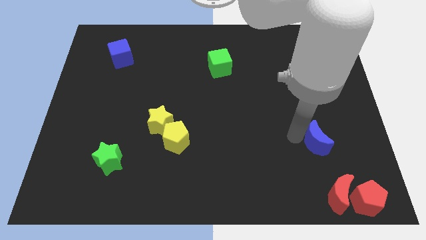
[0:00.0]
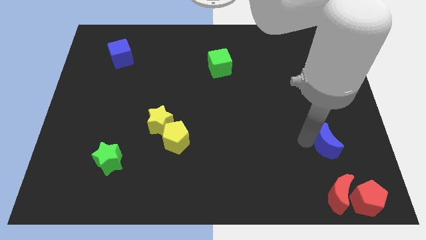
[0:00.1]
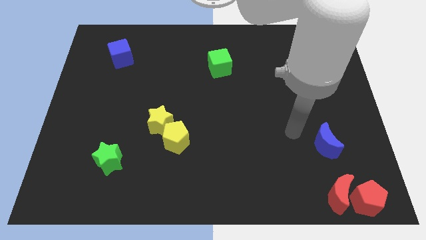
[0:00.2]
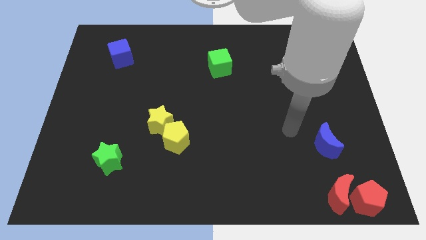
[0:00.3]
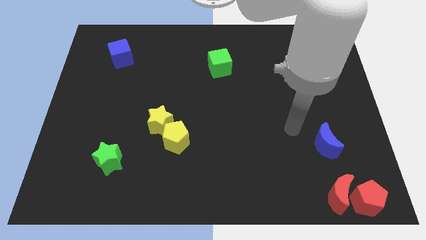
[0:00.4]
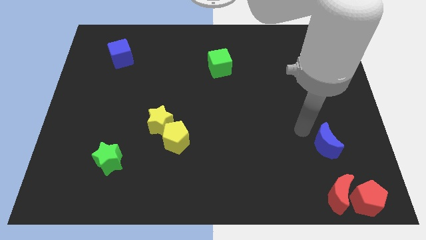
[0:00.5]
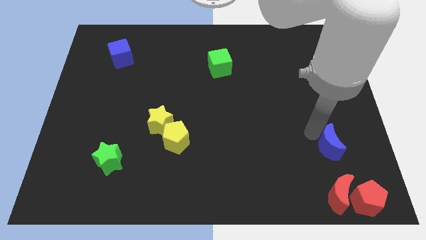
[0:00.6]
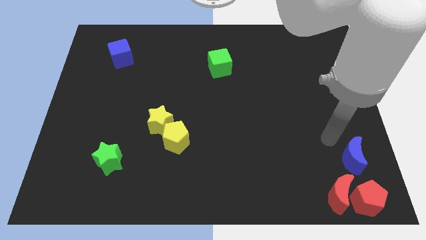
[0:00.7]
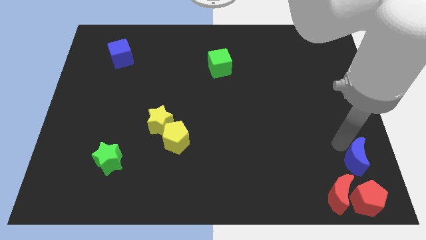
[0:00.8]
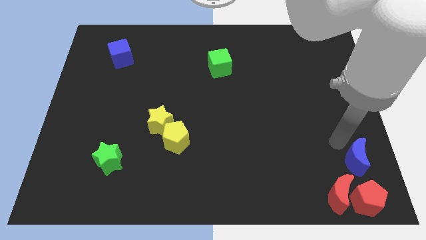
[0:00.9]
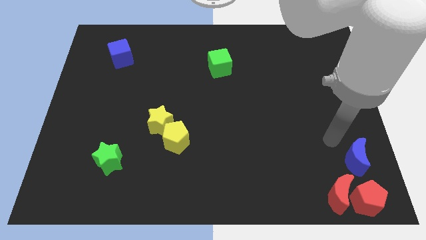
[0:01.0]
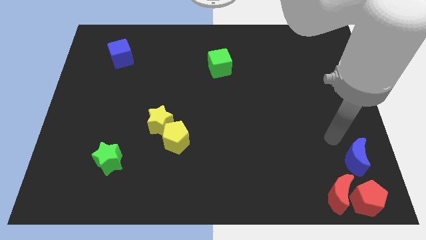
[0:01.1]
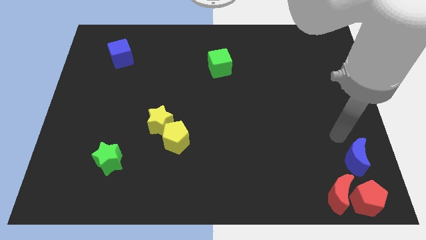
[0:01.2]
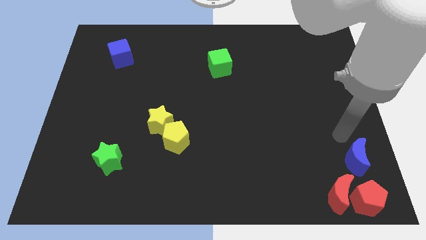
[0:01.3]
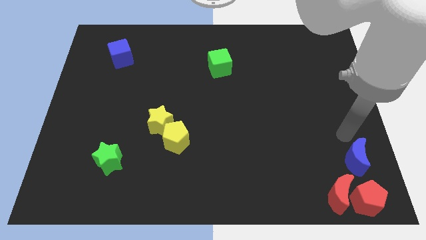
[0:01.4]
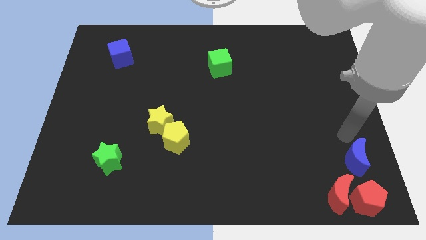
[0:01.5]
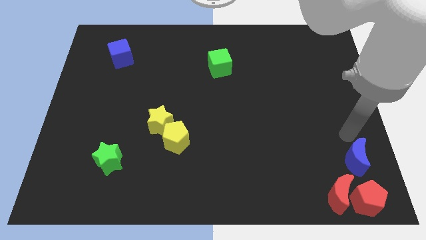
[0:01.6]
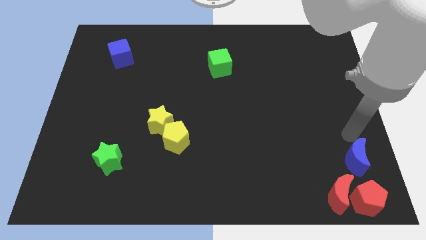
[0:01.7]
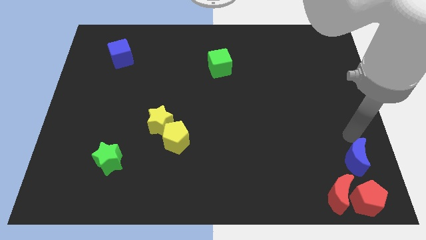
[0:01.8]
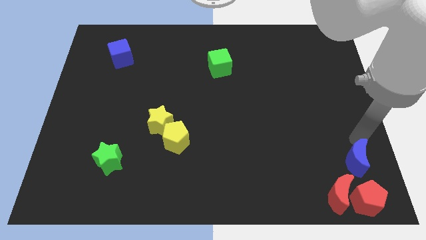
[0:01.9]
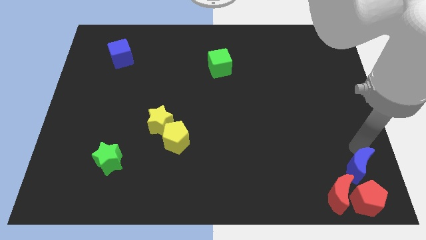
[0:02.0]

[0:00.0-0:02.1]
push the blue crescent towards the red crescent and red pentagon on the bottom right corner of the board

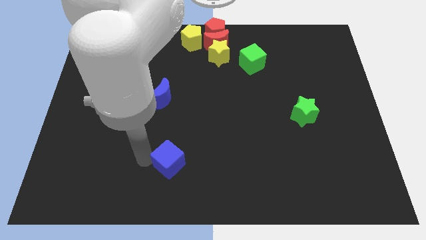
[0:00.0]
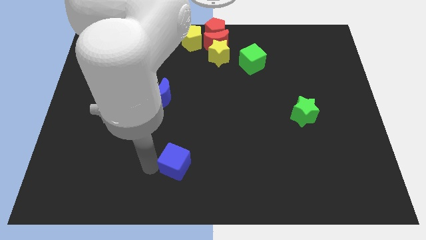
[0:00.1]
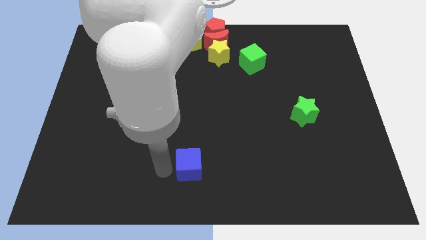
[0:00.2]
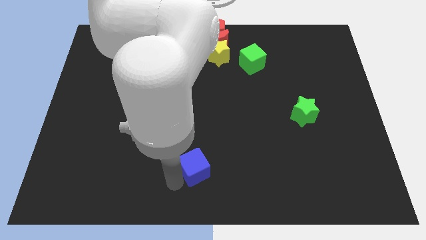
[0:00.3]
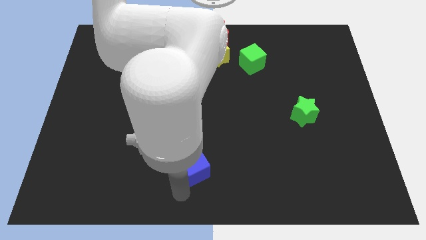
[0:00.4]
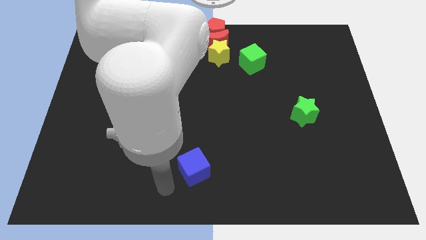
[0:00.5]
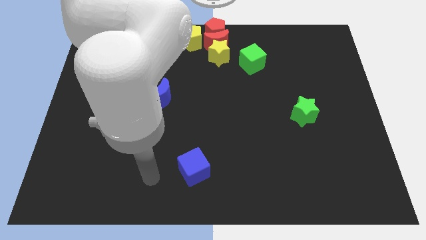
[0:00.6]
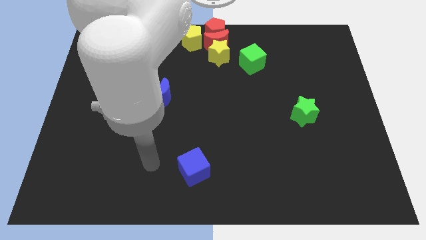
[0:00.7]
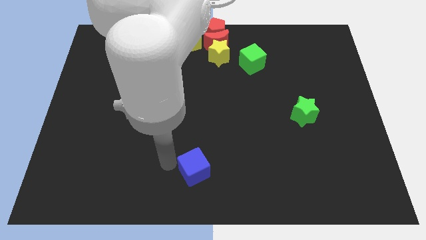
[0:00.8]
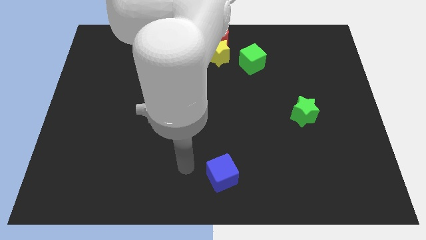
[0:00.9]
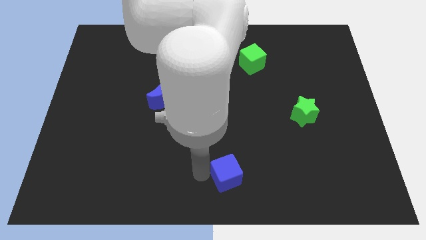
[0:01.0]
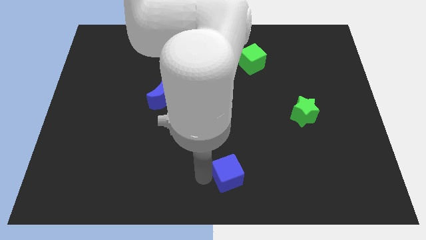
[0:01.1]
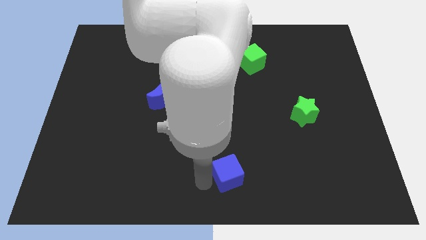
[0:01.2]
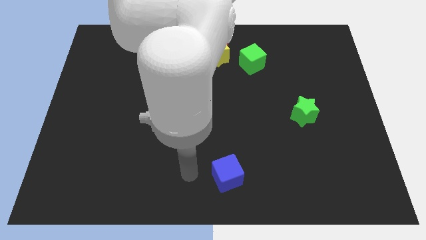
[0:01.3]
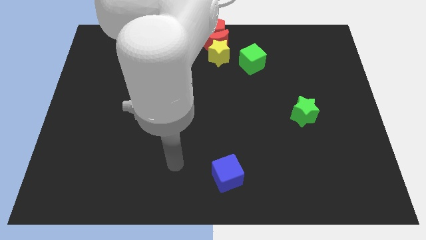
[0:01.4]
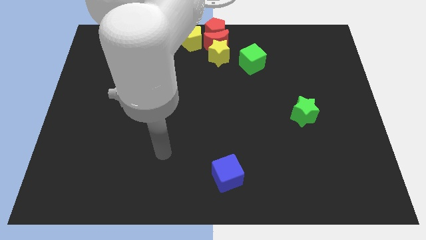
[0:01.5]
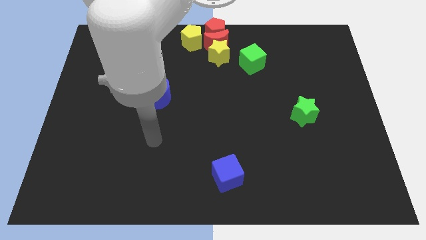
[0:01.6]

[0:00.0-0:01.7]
push blue cube towards the bottom center of the board

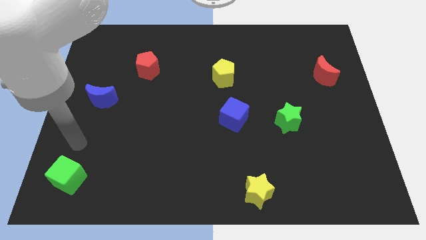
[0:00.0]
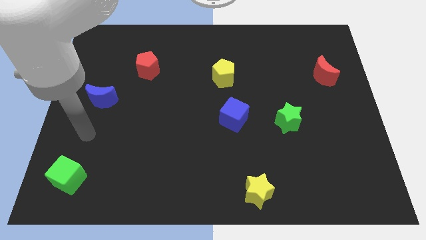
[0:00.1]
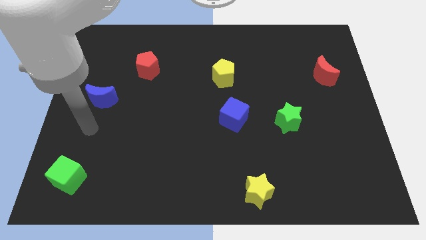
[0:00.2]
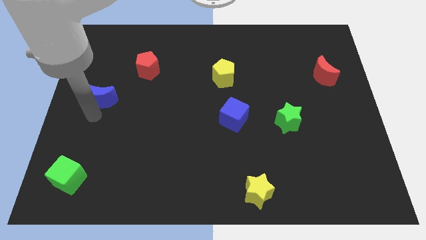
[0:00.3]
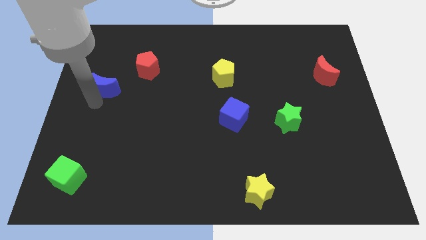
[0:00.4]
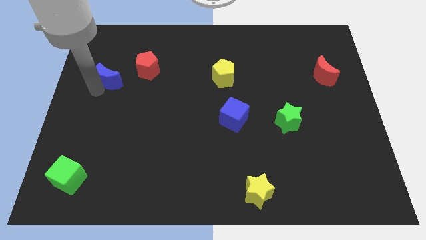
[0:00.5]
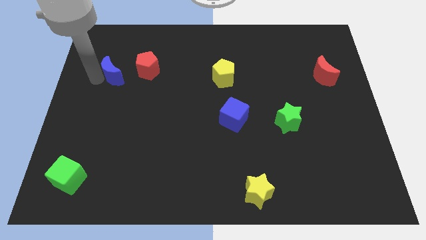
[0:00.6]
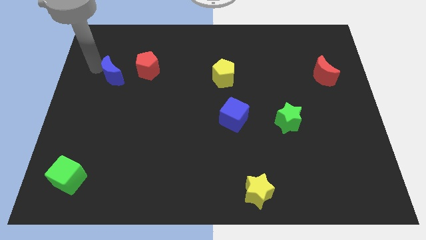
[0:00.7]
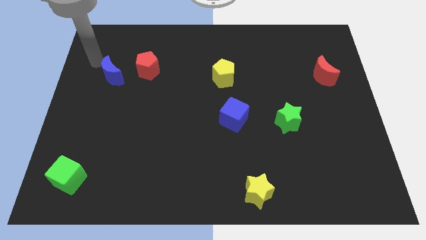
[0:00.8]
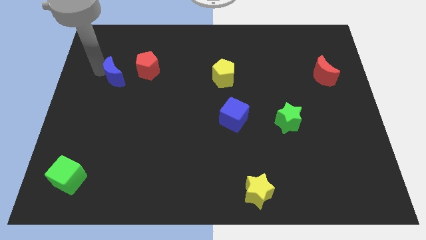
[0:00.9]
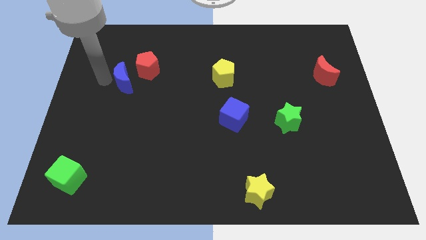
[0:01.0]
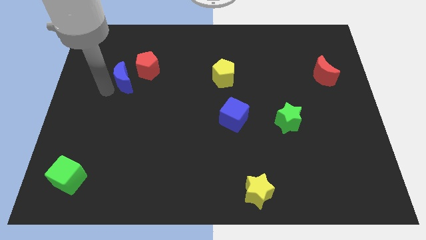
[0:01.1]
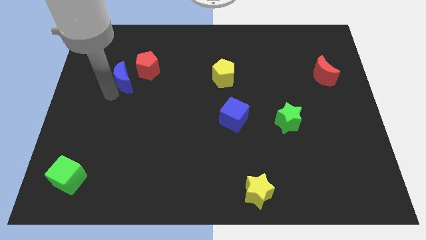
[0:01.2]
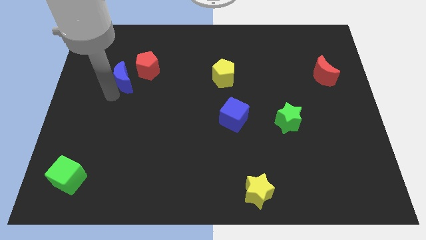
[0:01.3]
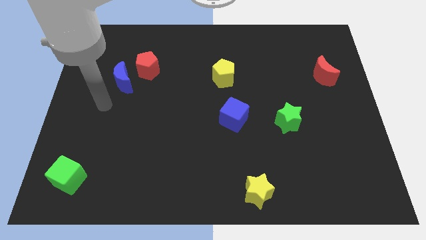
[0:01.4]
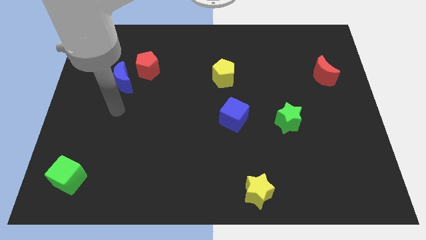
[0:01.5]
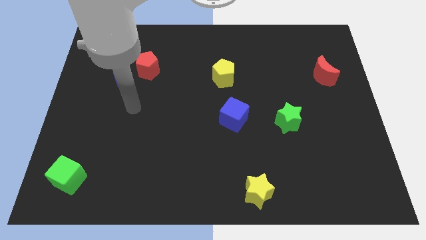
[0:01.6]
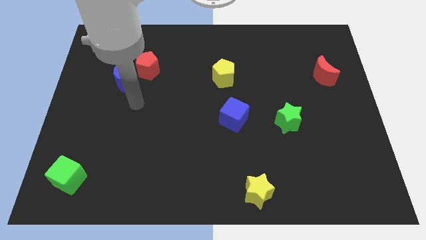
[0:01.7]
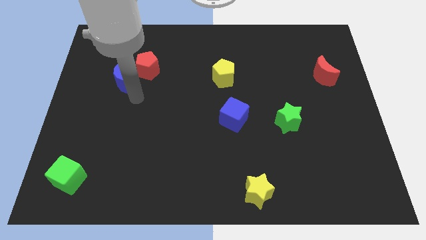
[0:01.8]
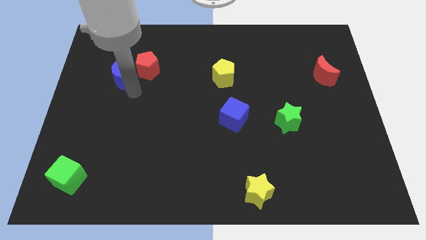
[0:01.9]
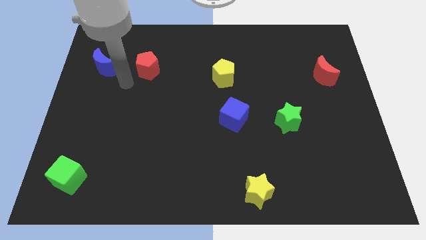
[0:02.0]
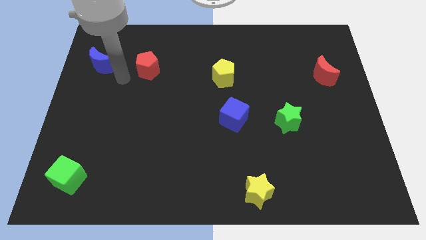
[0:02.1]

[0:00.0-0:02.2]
push the blue crescent to the left of the red pentagon

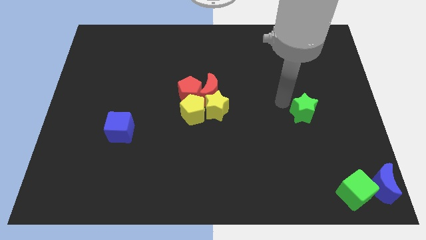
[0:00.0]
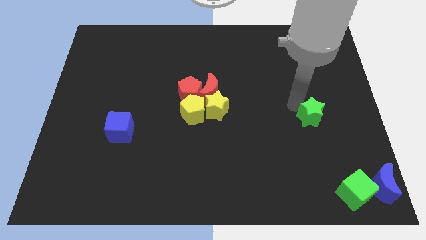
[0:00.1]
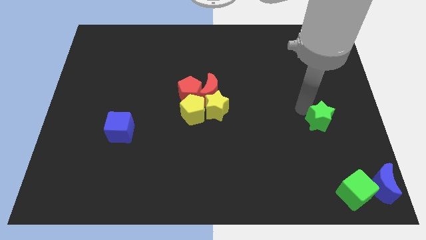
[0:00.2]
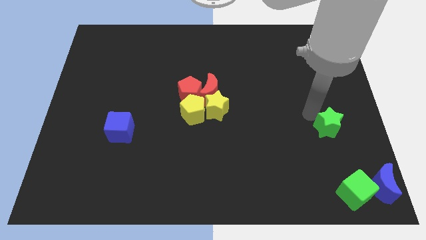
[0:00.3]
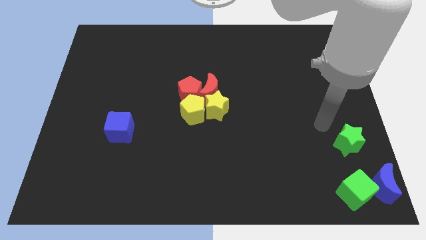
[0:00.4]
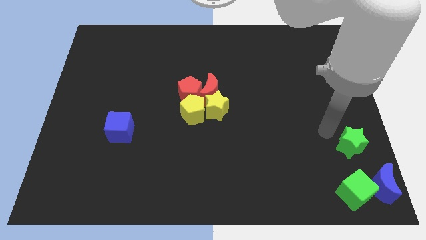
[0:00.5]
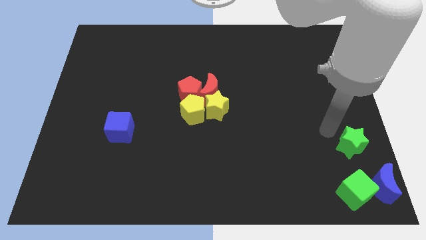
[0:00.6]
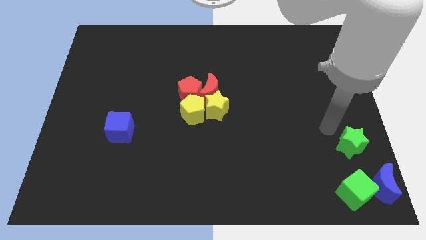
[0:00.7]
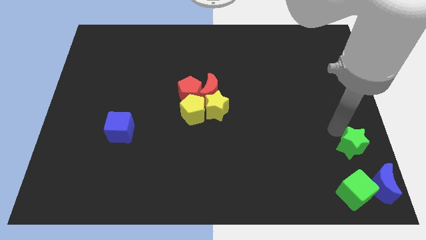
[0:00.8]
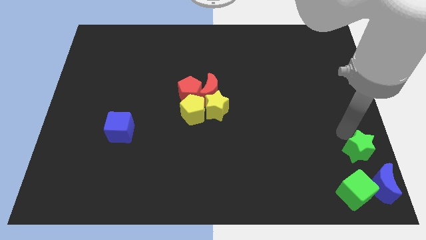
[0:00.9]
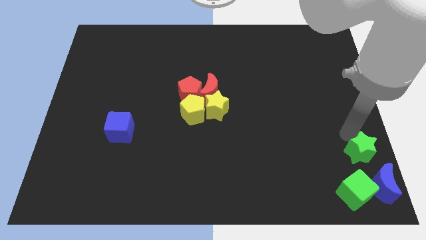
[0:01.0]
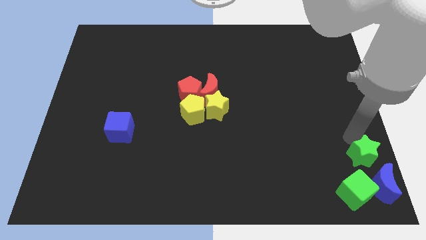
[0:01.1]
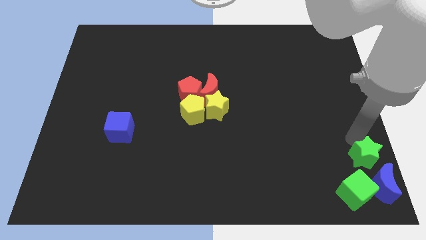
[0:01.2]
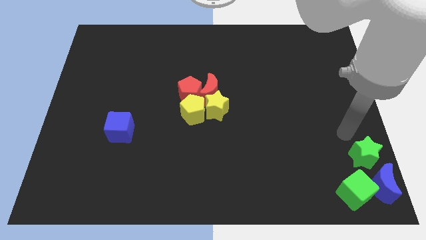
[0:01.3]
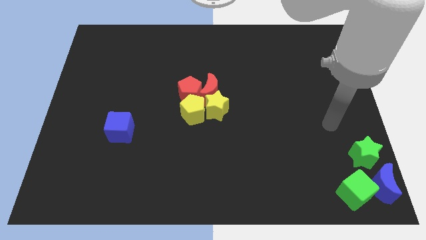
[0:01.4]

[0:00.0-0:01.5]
push green star above blue crescent

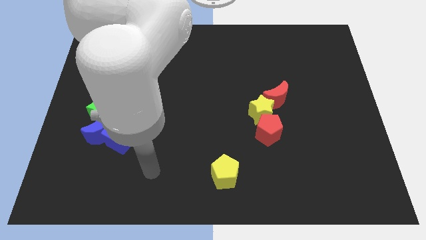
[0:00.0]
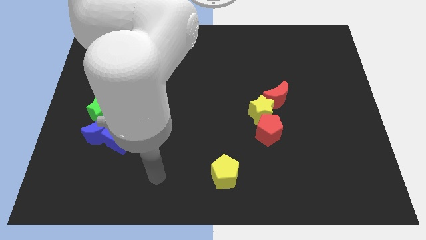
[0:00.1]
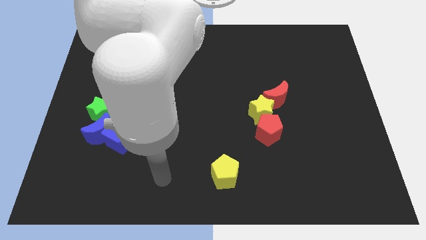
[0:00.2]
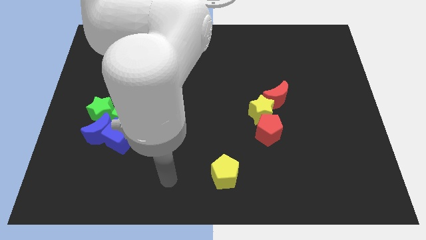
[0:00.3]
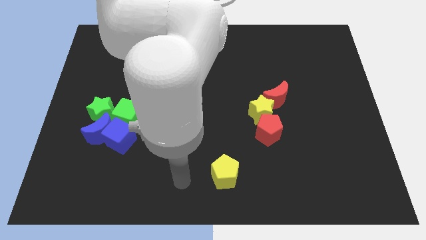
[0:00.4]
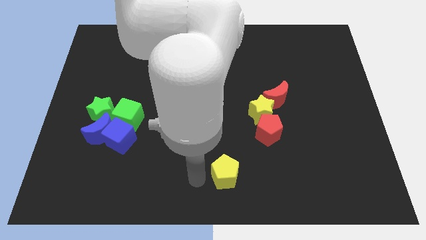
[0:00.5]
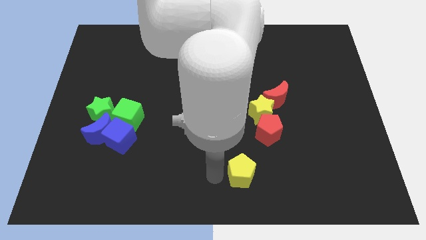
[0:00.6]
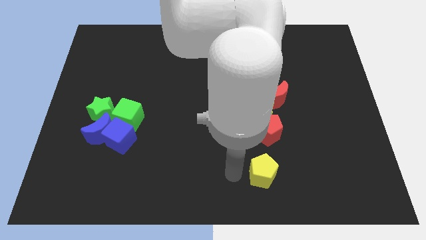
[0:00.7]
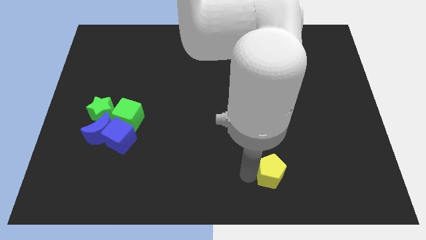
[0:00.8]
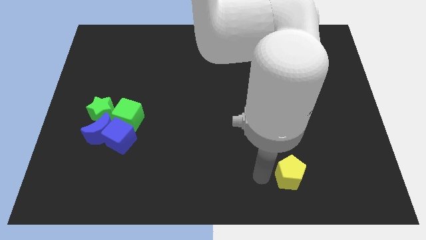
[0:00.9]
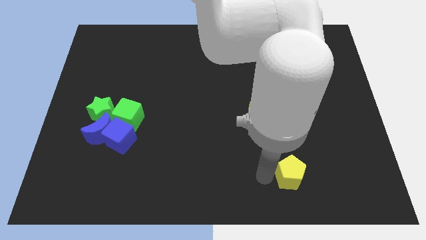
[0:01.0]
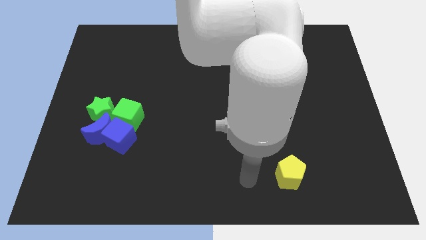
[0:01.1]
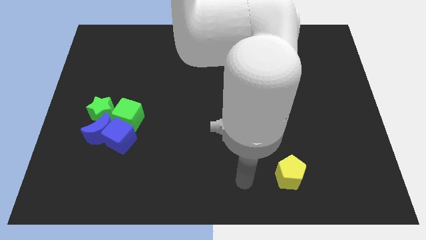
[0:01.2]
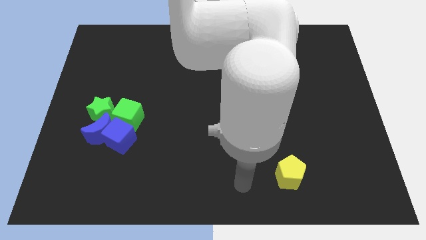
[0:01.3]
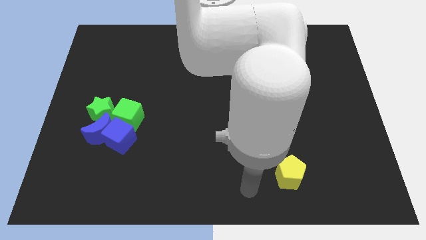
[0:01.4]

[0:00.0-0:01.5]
move the yellow pentagon slightly to the right of the board
